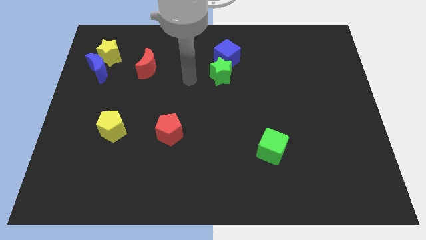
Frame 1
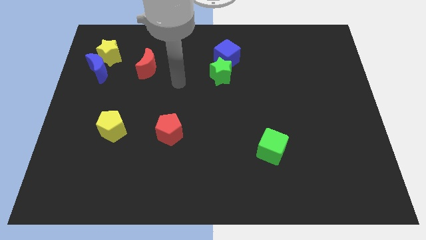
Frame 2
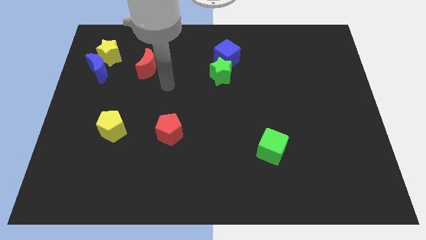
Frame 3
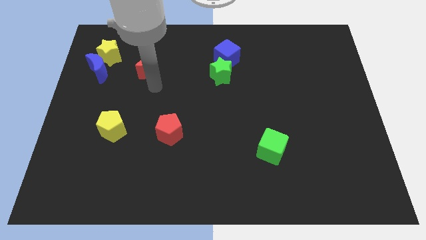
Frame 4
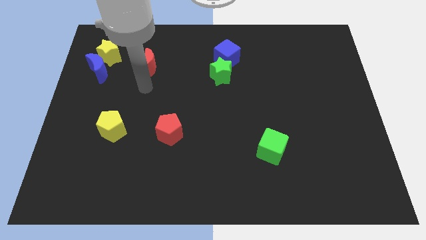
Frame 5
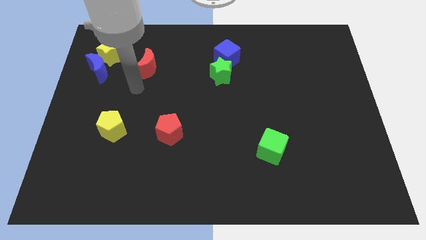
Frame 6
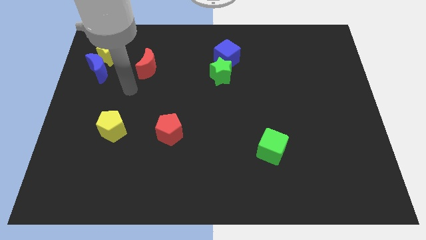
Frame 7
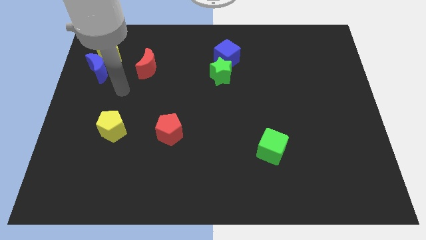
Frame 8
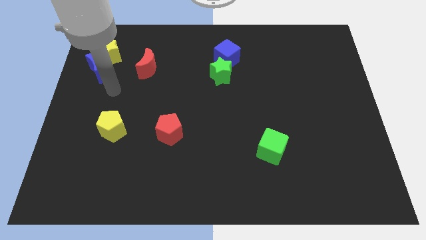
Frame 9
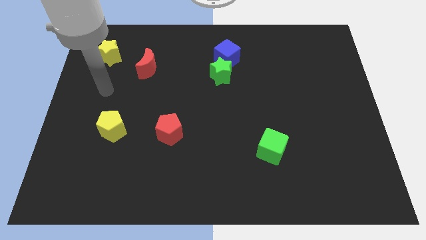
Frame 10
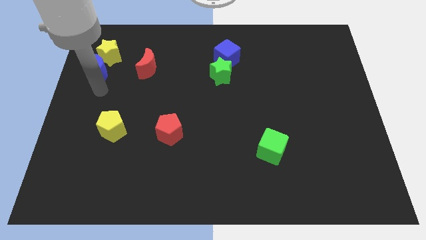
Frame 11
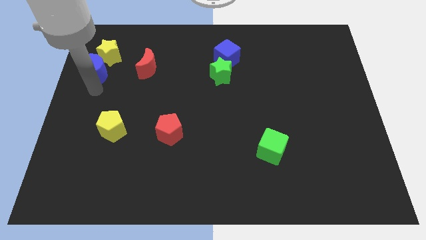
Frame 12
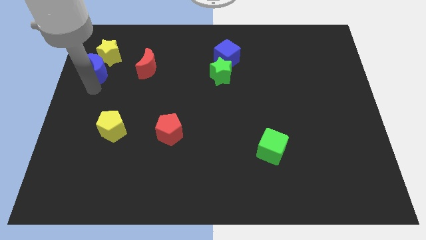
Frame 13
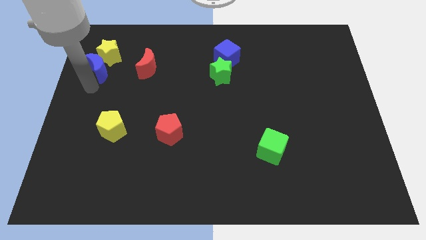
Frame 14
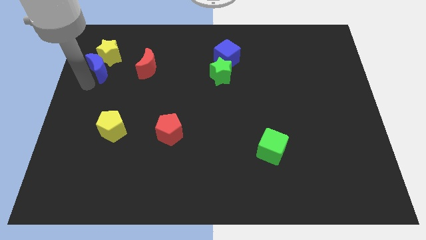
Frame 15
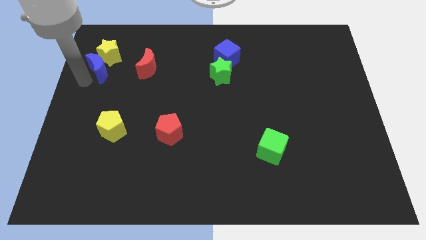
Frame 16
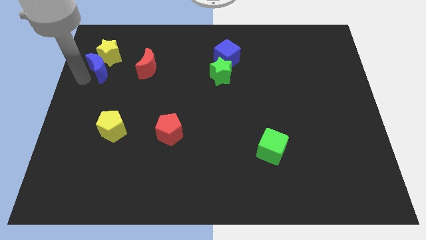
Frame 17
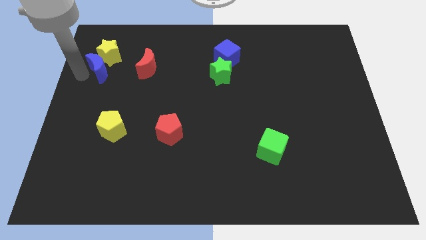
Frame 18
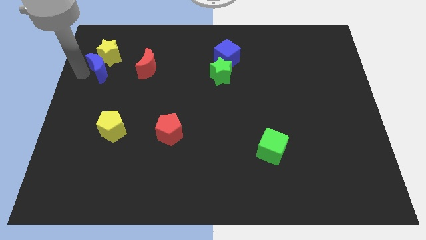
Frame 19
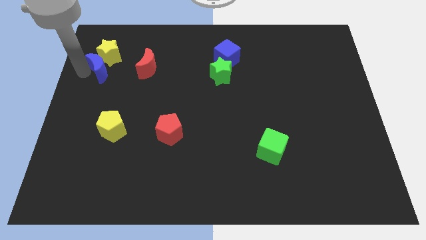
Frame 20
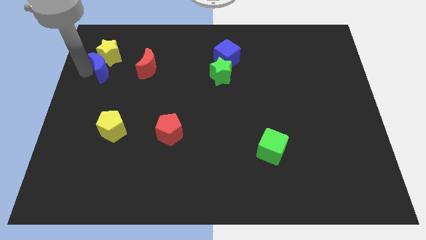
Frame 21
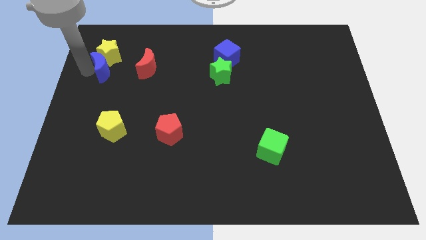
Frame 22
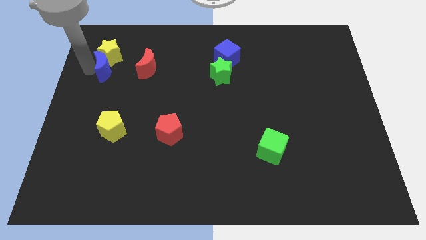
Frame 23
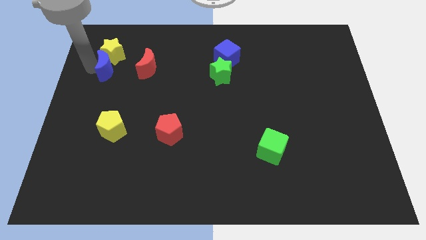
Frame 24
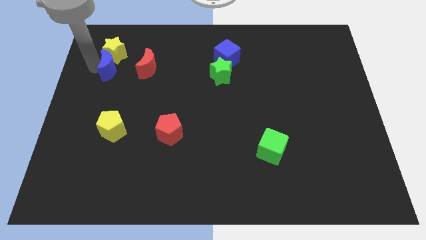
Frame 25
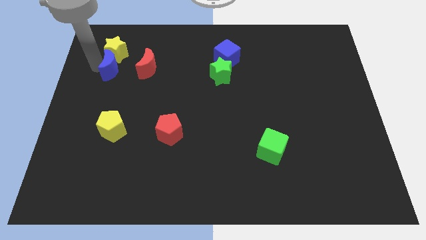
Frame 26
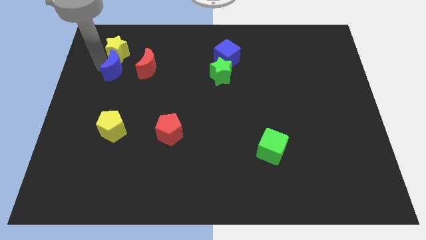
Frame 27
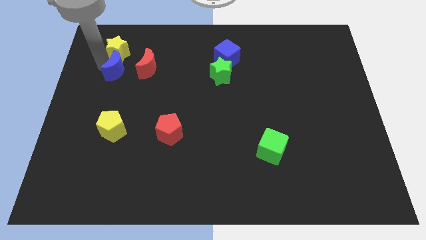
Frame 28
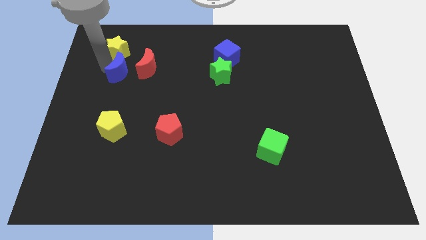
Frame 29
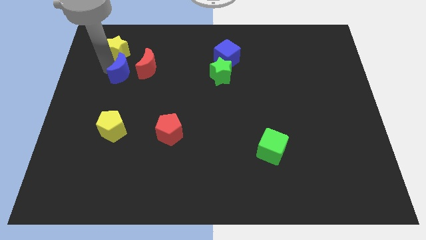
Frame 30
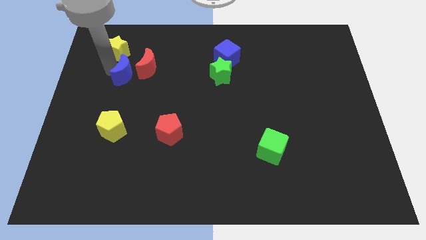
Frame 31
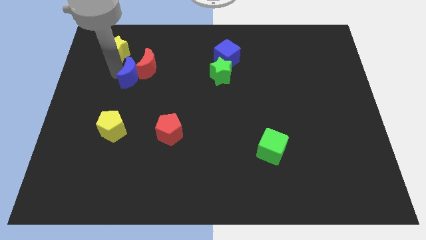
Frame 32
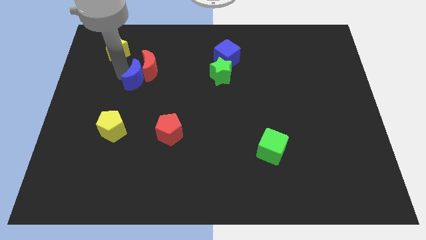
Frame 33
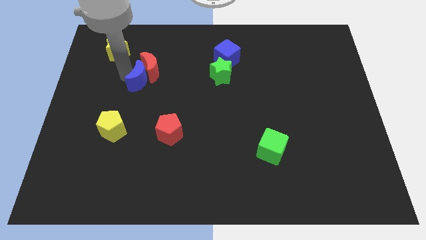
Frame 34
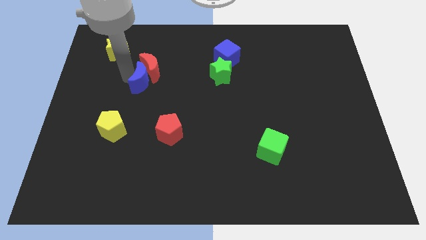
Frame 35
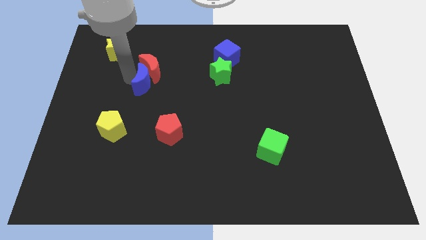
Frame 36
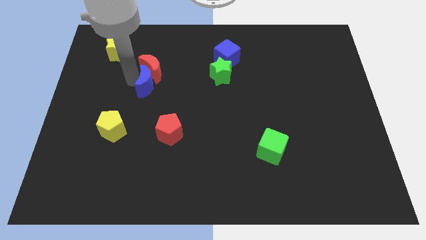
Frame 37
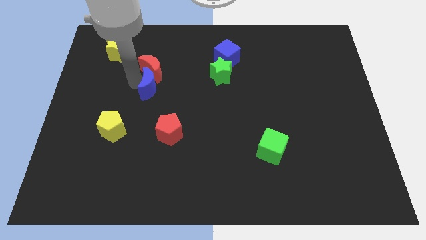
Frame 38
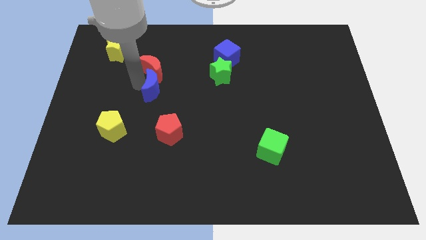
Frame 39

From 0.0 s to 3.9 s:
push blue crescent into the red crescent

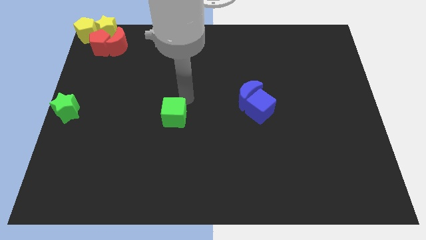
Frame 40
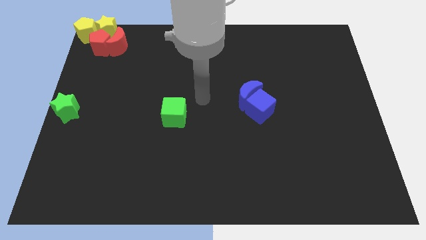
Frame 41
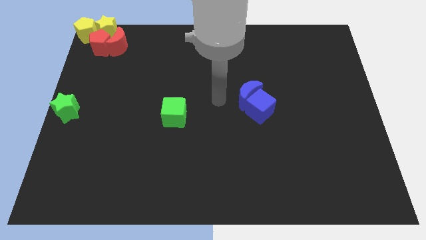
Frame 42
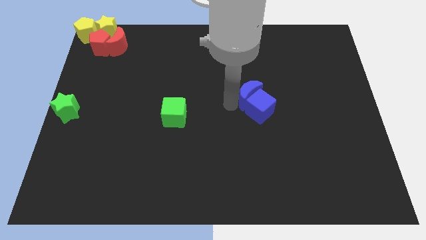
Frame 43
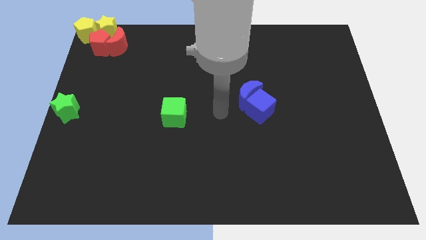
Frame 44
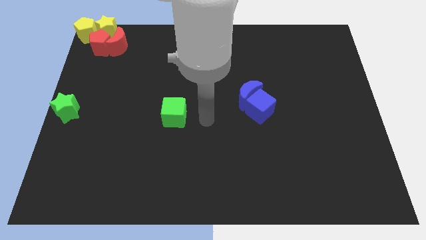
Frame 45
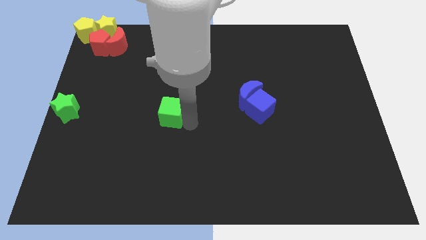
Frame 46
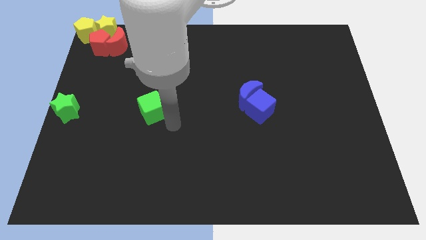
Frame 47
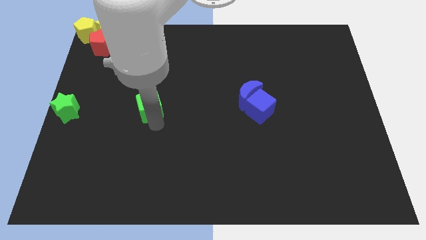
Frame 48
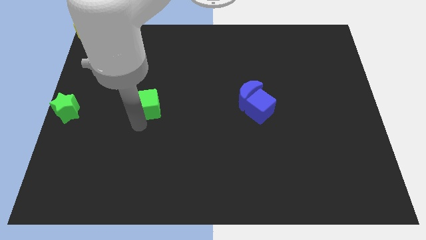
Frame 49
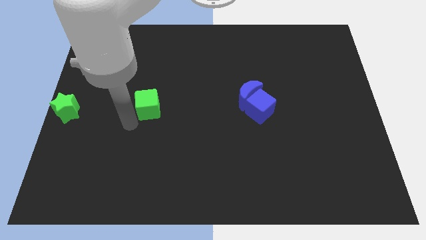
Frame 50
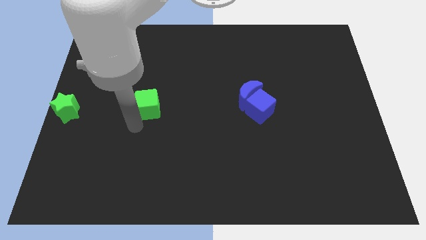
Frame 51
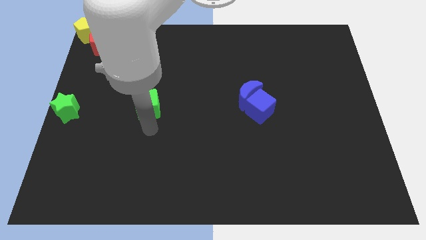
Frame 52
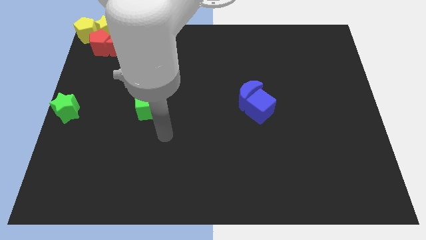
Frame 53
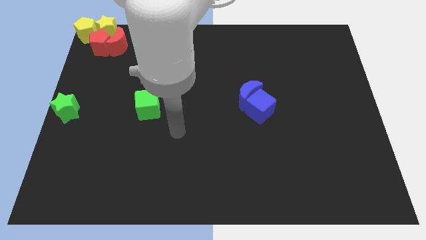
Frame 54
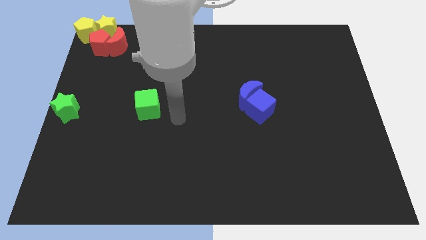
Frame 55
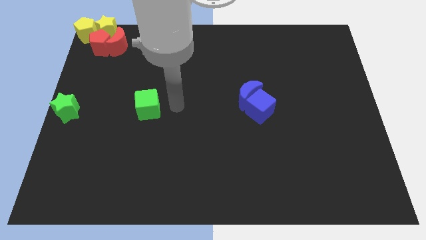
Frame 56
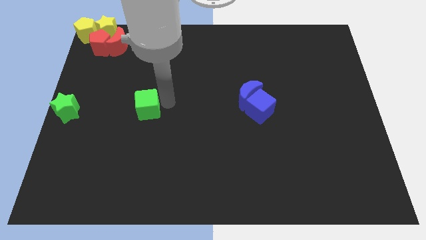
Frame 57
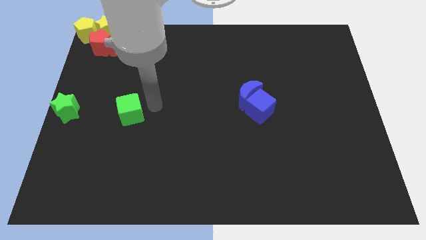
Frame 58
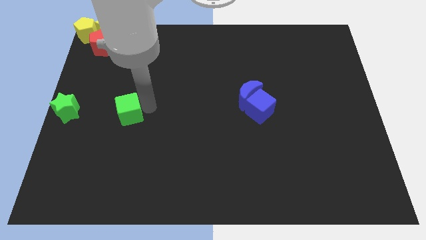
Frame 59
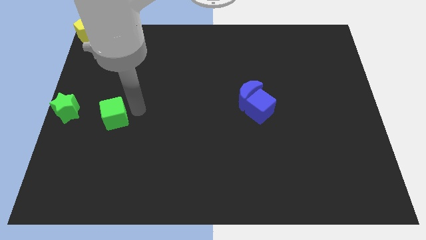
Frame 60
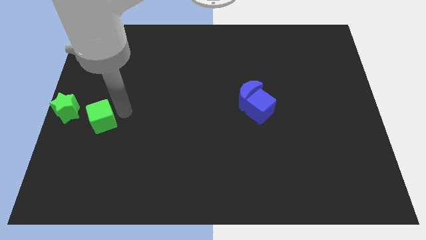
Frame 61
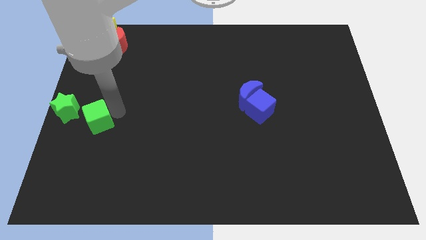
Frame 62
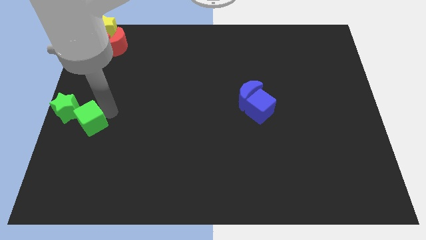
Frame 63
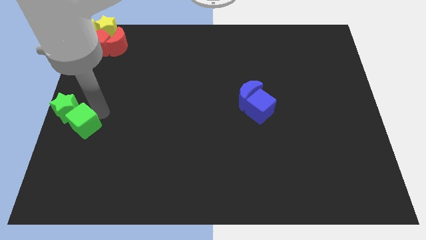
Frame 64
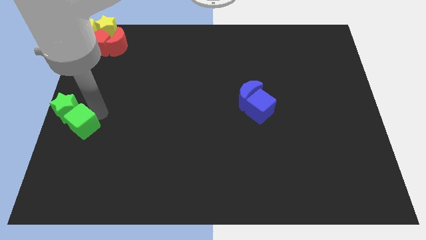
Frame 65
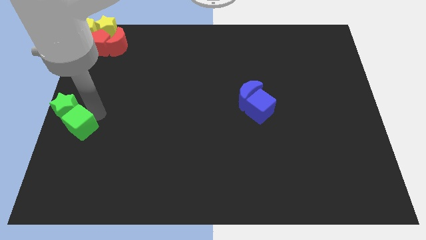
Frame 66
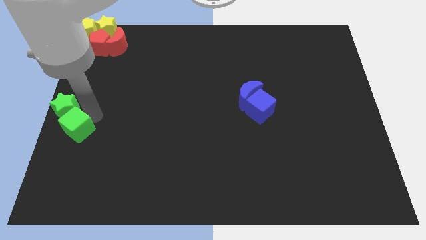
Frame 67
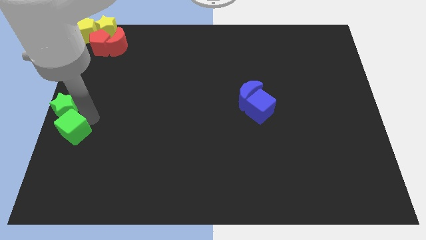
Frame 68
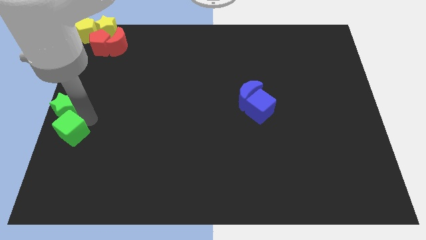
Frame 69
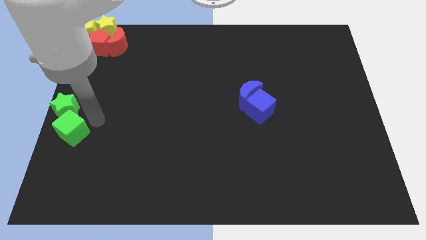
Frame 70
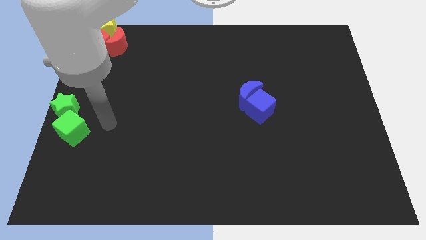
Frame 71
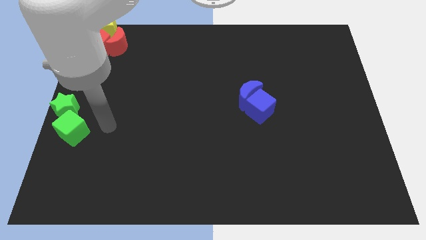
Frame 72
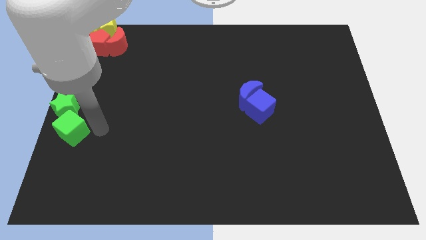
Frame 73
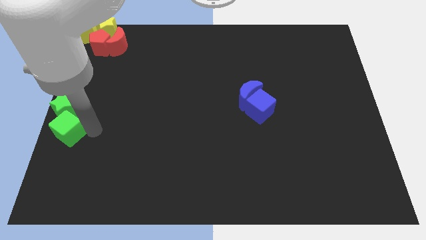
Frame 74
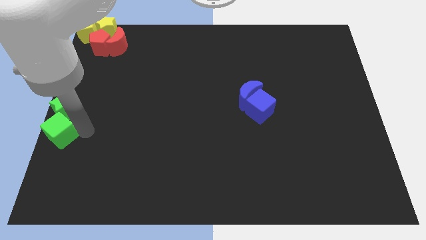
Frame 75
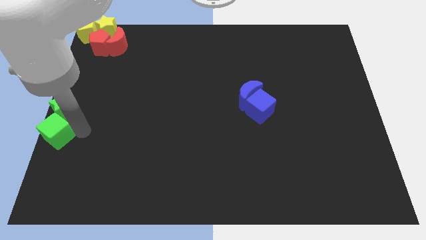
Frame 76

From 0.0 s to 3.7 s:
place the green cube below the green star

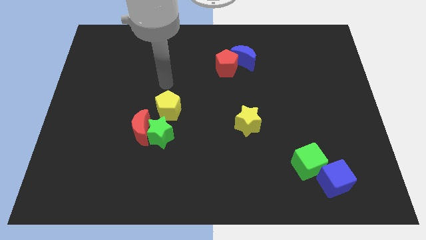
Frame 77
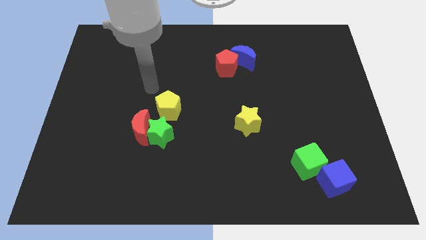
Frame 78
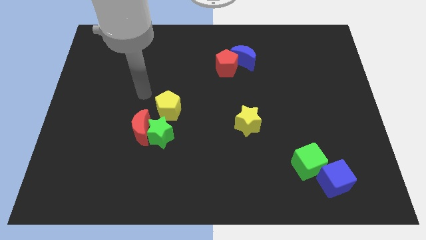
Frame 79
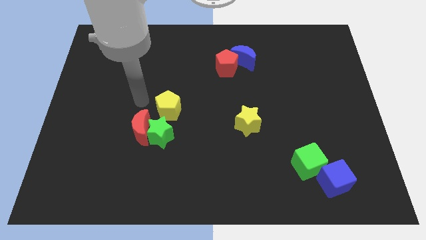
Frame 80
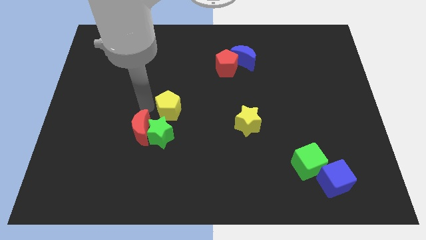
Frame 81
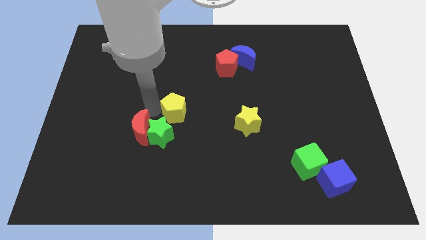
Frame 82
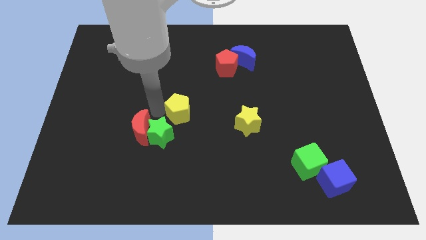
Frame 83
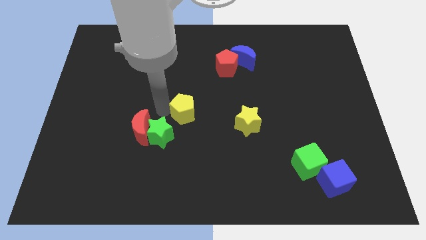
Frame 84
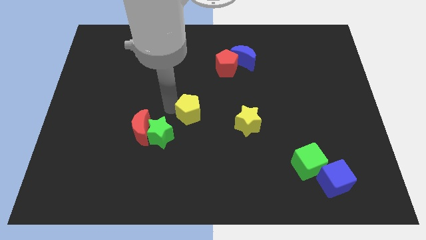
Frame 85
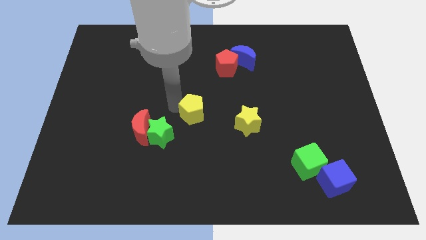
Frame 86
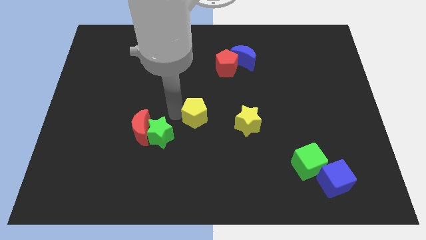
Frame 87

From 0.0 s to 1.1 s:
push yellow pentagon slightly to the right

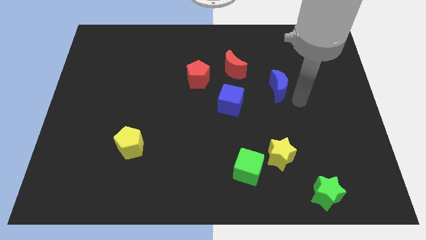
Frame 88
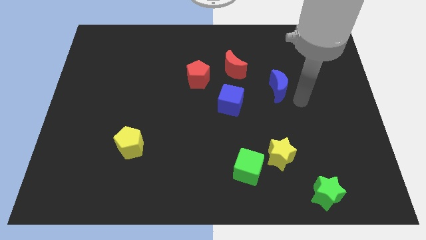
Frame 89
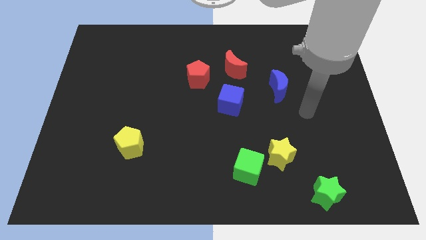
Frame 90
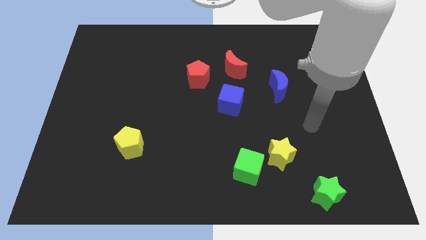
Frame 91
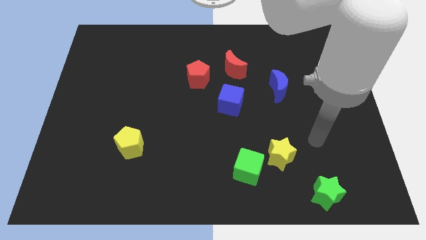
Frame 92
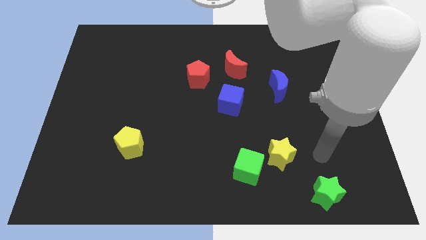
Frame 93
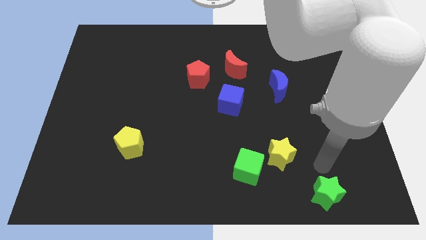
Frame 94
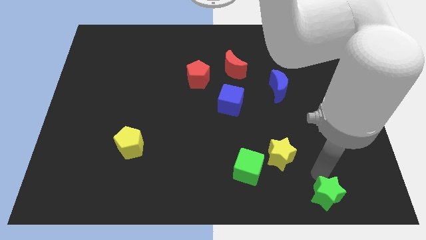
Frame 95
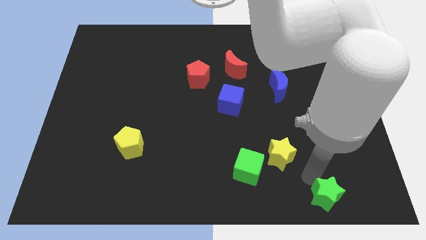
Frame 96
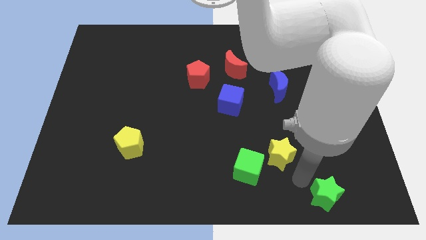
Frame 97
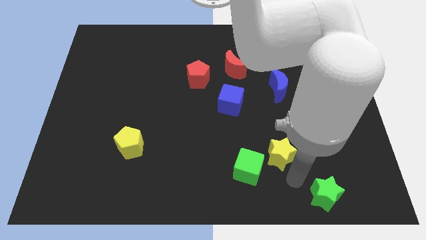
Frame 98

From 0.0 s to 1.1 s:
slightly move the green star to the right of the board
